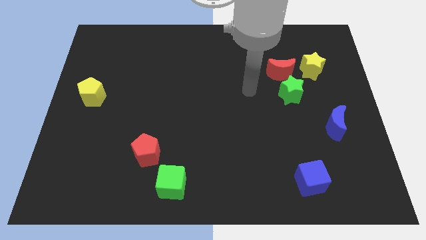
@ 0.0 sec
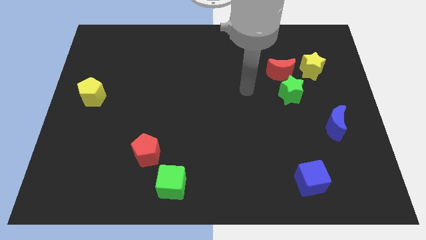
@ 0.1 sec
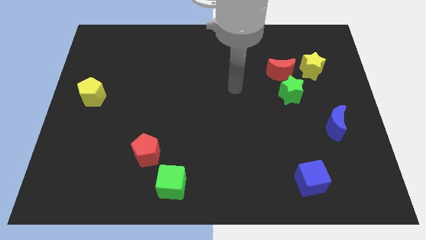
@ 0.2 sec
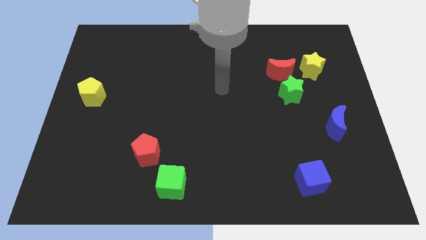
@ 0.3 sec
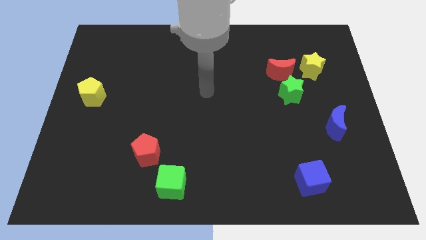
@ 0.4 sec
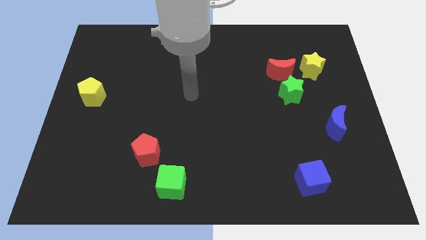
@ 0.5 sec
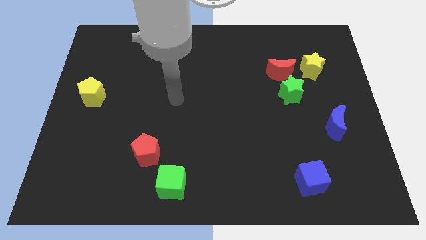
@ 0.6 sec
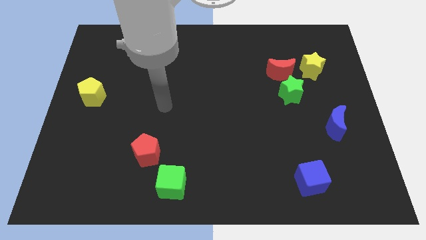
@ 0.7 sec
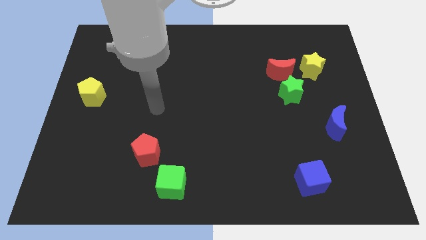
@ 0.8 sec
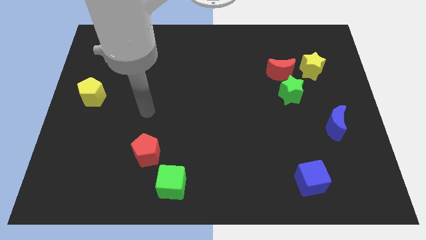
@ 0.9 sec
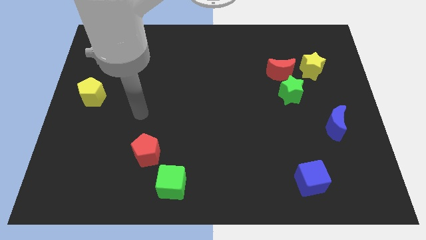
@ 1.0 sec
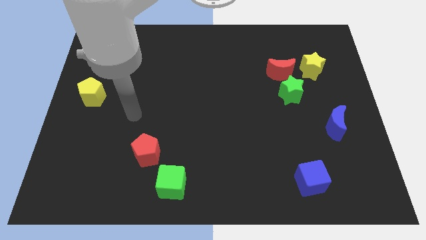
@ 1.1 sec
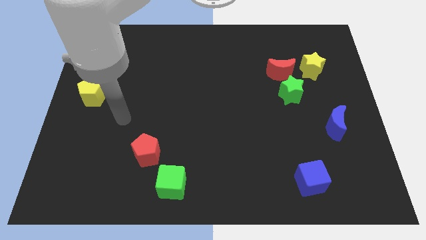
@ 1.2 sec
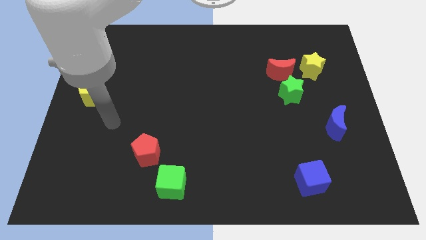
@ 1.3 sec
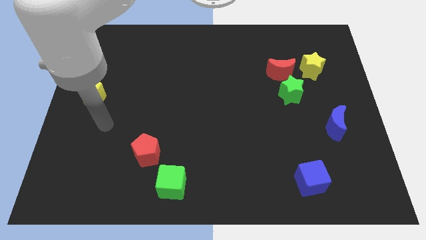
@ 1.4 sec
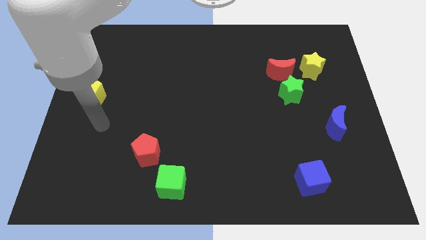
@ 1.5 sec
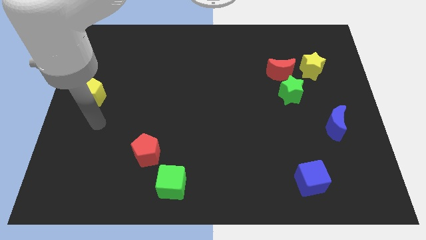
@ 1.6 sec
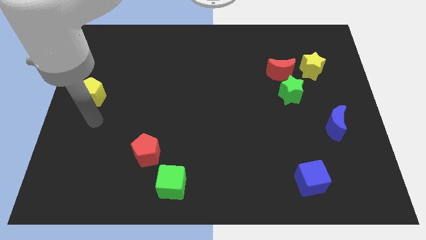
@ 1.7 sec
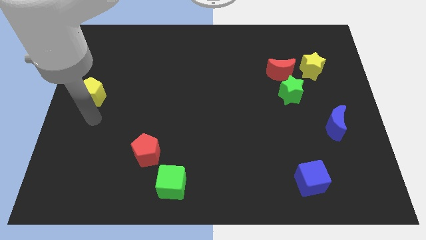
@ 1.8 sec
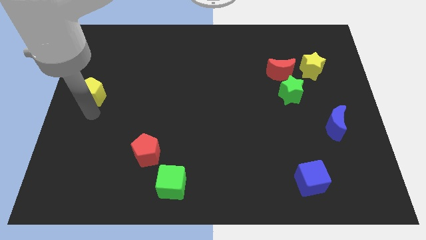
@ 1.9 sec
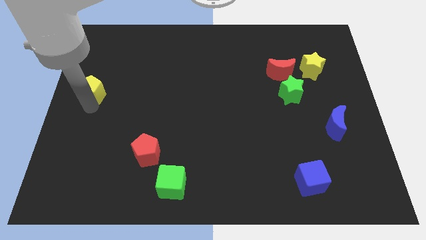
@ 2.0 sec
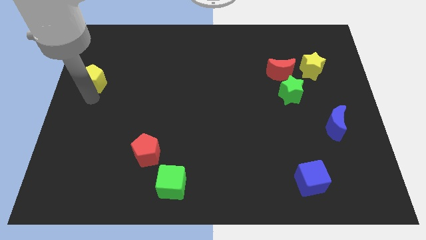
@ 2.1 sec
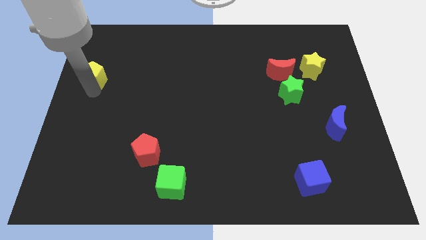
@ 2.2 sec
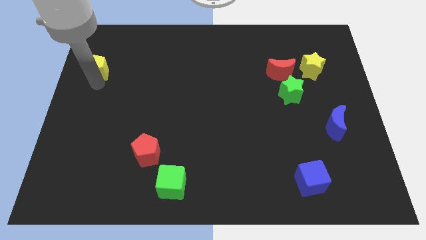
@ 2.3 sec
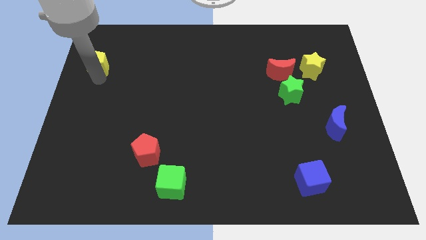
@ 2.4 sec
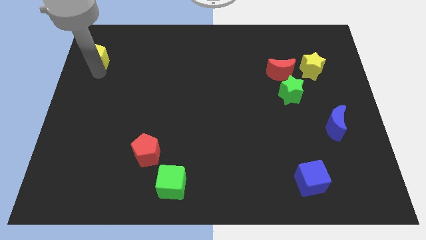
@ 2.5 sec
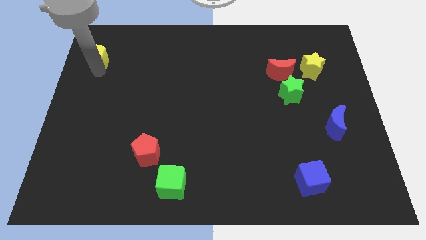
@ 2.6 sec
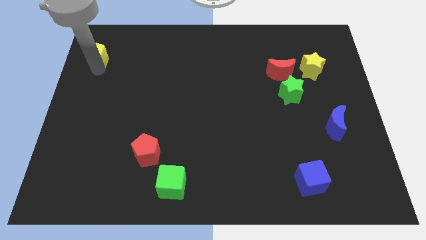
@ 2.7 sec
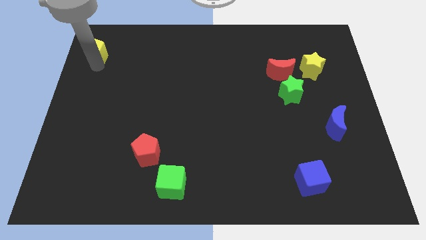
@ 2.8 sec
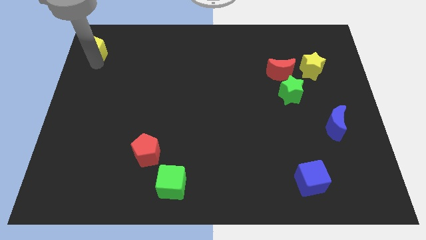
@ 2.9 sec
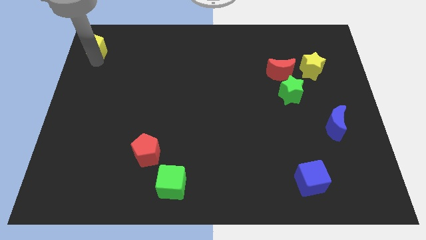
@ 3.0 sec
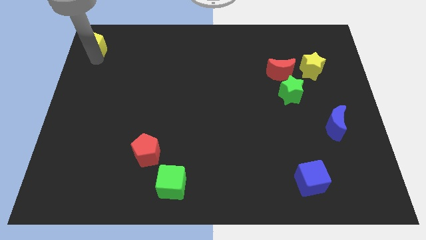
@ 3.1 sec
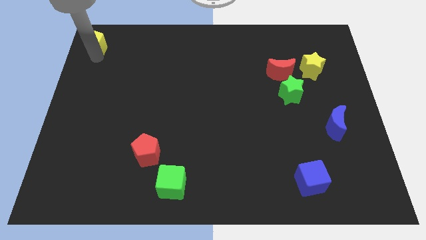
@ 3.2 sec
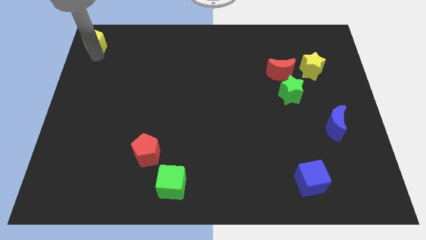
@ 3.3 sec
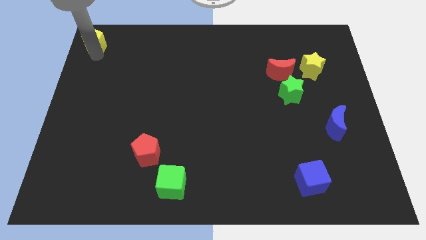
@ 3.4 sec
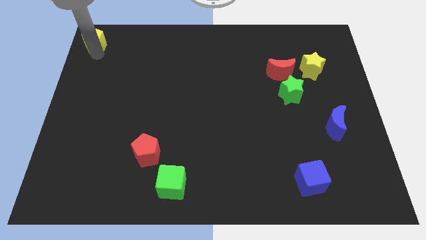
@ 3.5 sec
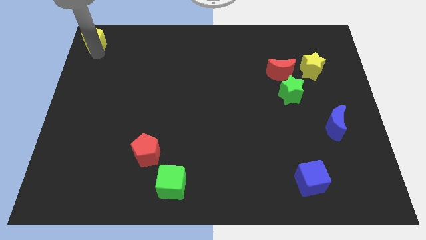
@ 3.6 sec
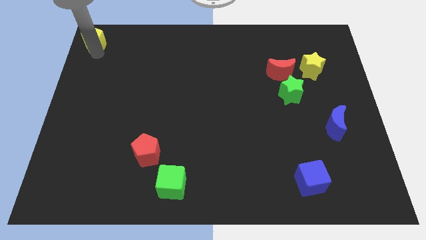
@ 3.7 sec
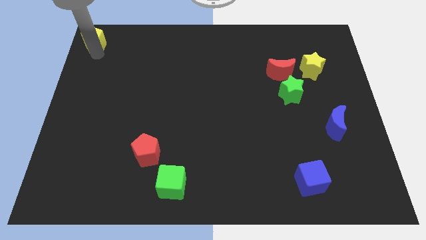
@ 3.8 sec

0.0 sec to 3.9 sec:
push yellow pentagon towards top left side of the board

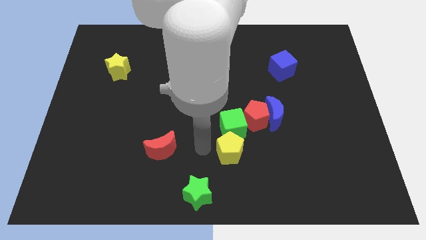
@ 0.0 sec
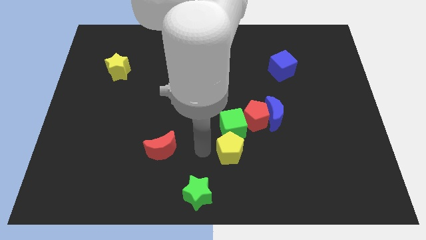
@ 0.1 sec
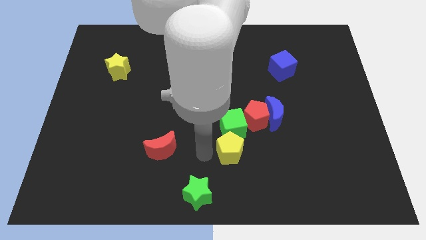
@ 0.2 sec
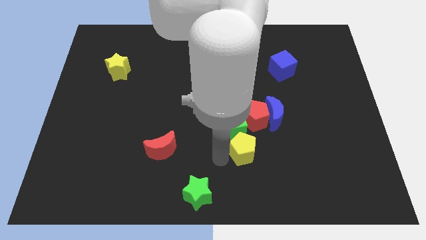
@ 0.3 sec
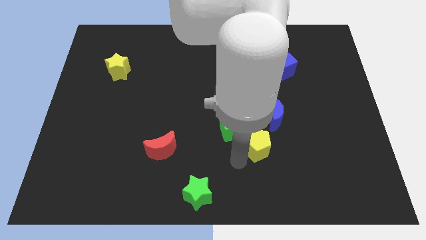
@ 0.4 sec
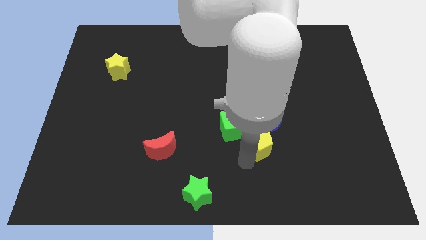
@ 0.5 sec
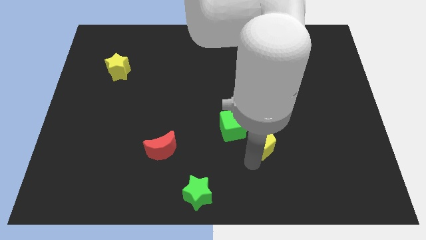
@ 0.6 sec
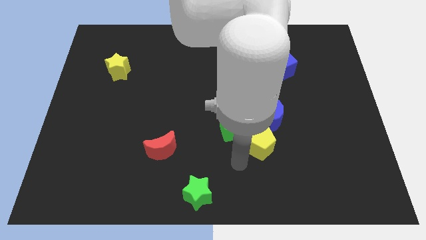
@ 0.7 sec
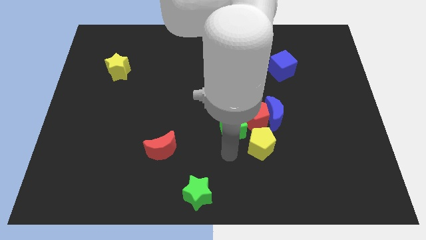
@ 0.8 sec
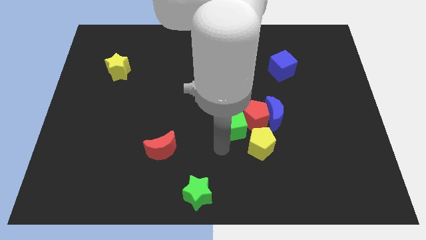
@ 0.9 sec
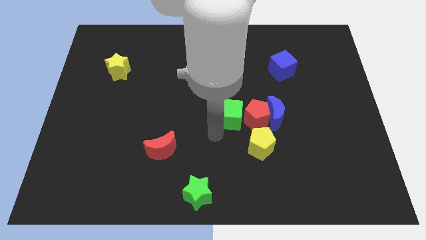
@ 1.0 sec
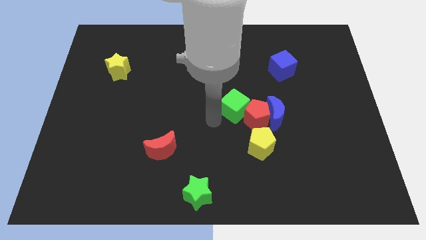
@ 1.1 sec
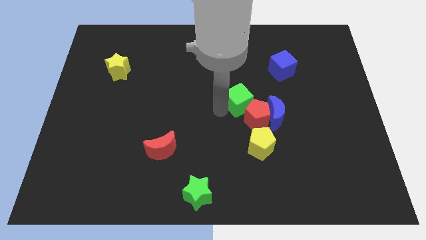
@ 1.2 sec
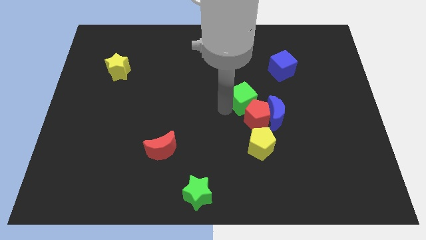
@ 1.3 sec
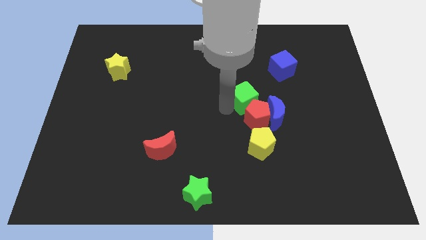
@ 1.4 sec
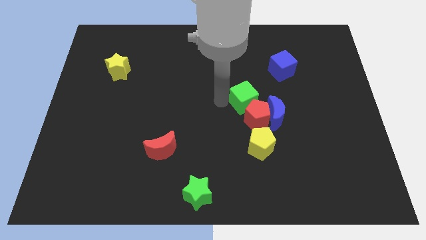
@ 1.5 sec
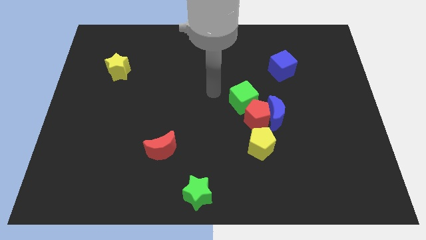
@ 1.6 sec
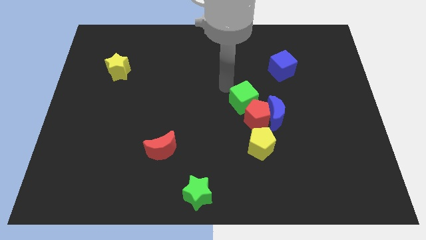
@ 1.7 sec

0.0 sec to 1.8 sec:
separate yellow pentagon and the green cube

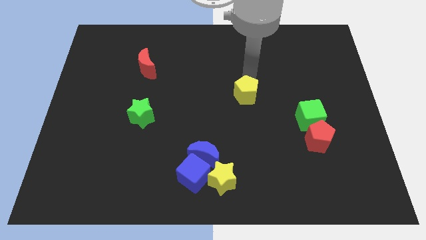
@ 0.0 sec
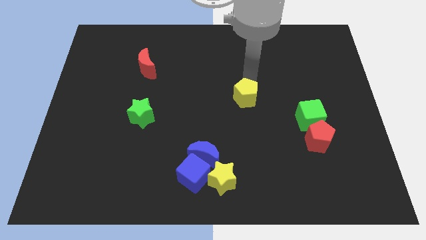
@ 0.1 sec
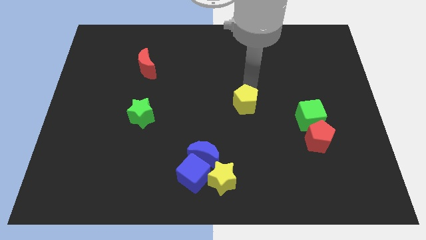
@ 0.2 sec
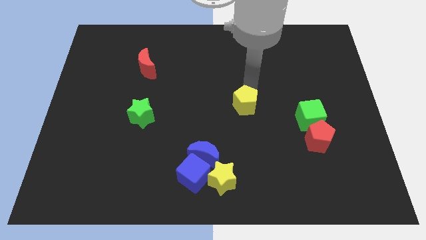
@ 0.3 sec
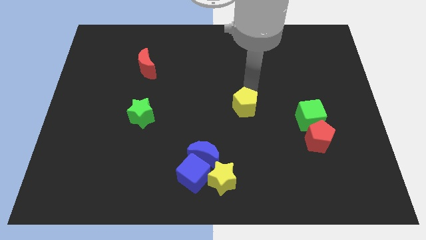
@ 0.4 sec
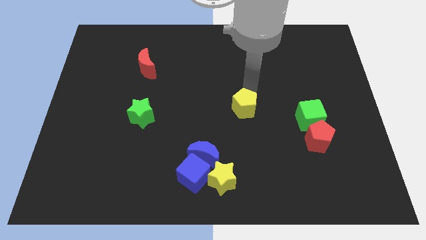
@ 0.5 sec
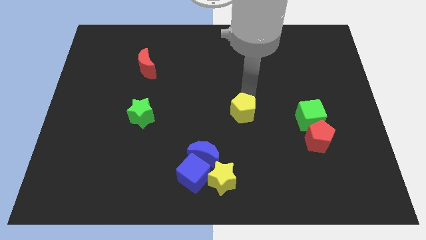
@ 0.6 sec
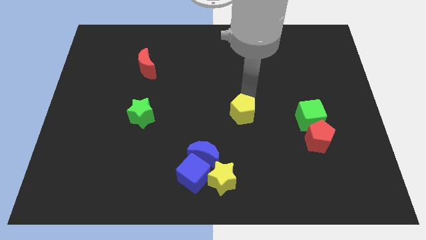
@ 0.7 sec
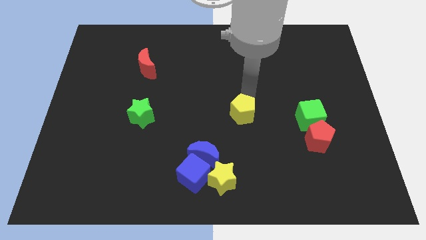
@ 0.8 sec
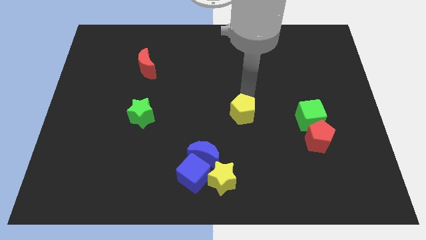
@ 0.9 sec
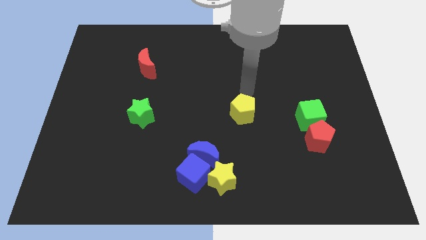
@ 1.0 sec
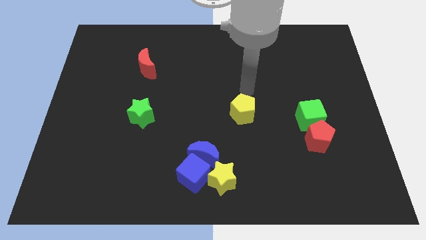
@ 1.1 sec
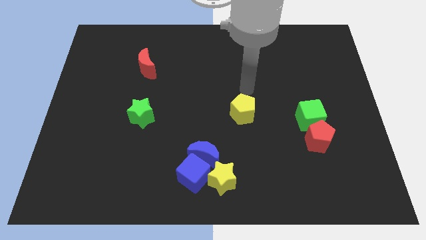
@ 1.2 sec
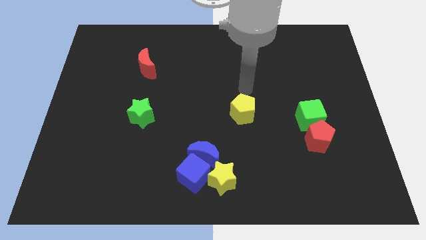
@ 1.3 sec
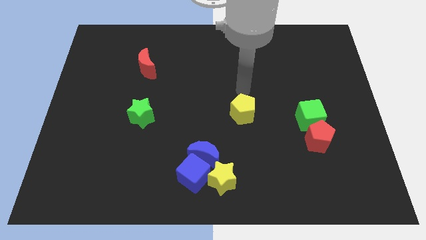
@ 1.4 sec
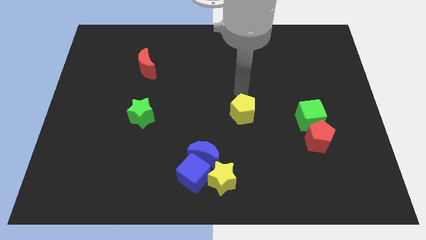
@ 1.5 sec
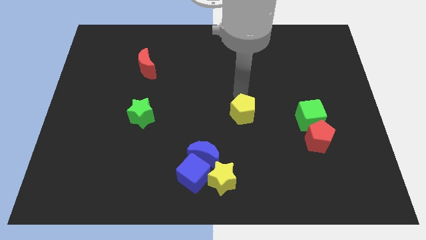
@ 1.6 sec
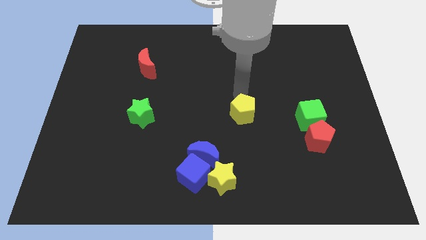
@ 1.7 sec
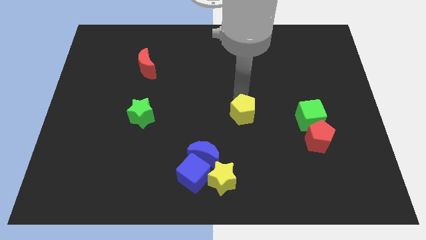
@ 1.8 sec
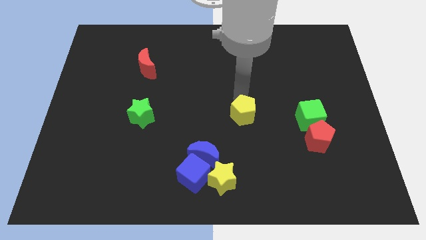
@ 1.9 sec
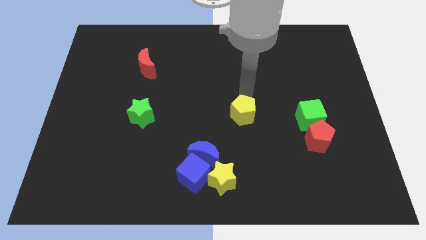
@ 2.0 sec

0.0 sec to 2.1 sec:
move the yellow pentagon towards the yellow star

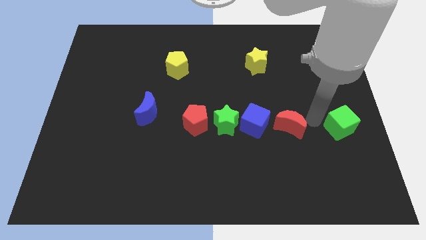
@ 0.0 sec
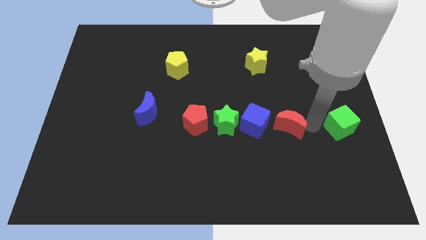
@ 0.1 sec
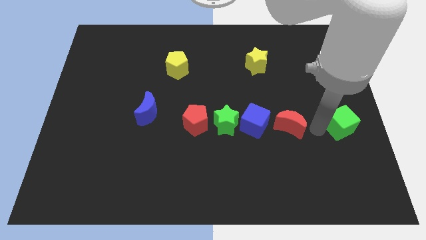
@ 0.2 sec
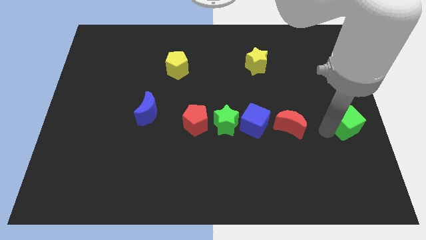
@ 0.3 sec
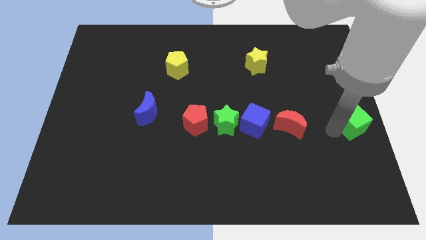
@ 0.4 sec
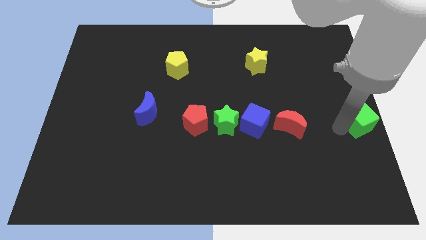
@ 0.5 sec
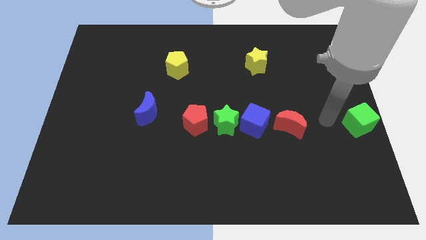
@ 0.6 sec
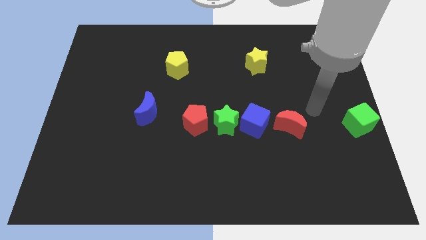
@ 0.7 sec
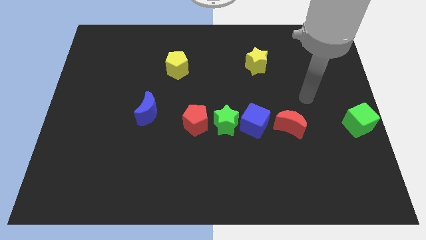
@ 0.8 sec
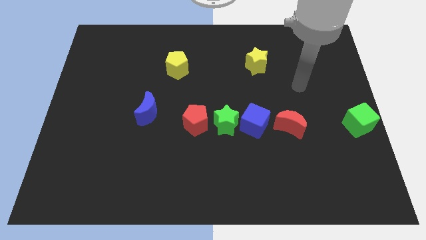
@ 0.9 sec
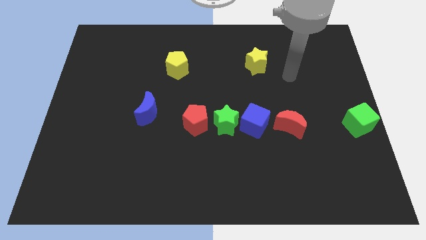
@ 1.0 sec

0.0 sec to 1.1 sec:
move the green cube to the center right of the board
